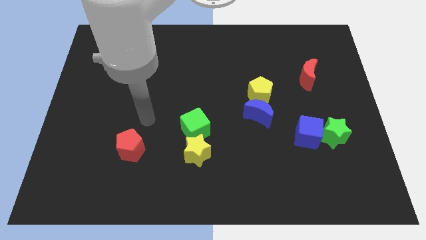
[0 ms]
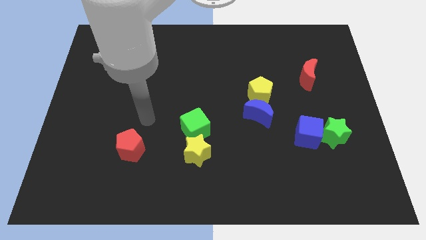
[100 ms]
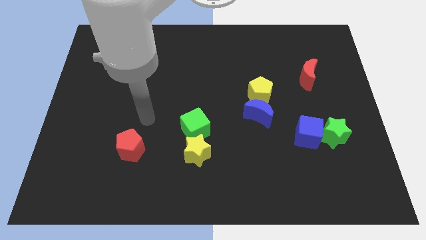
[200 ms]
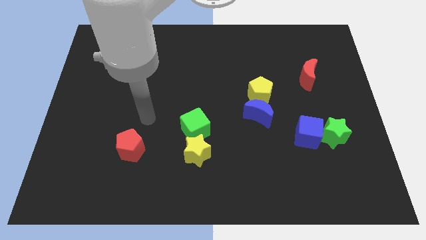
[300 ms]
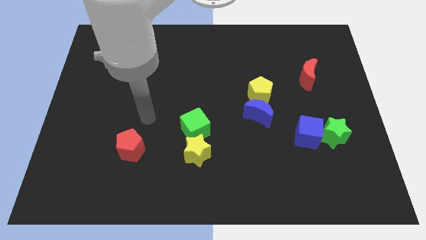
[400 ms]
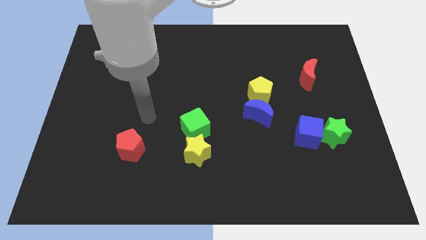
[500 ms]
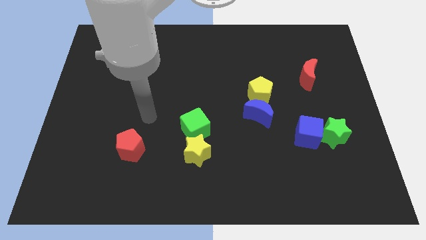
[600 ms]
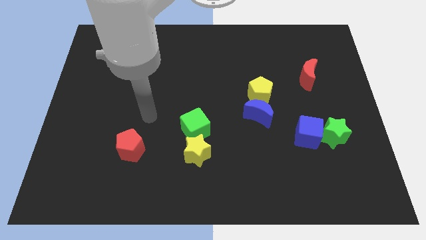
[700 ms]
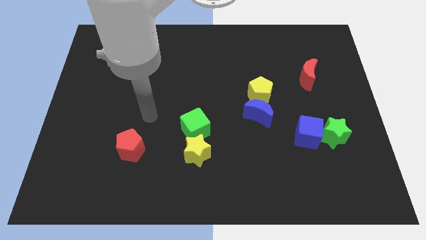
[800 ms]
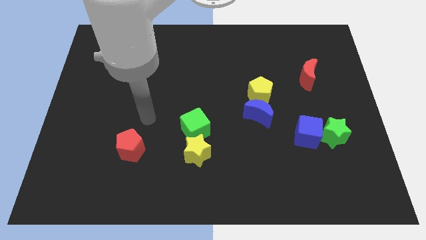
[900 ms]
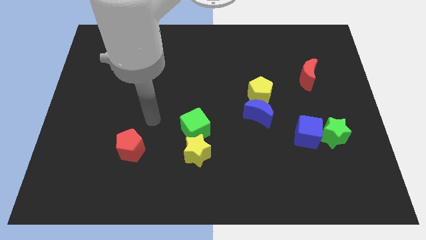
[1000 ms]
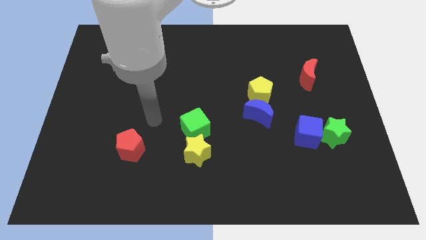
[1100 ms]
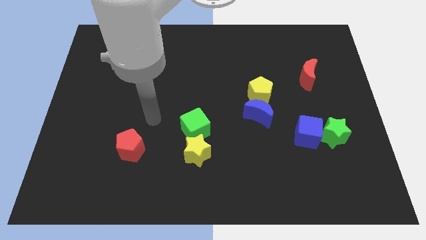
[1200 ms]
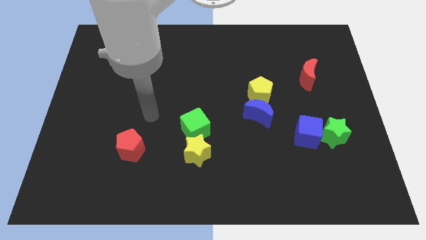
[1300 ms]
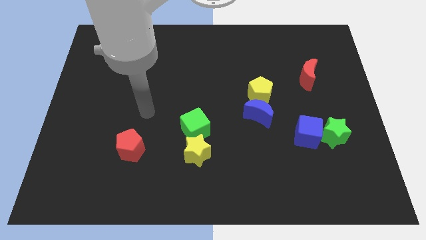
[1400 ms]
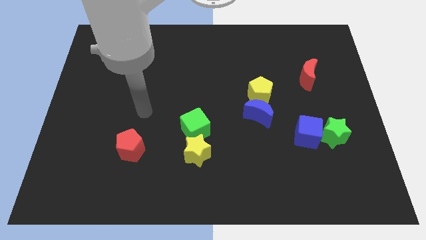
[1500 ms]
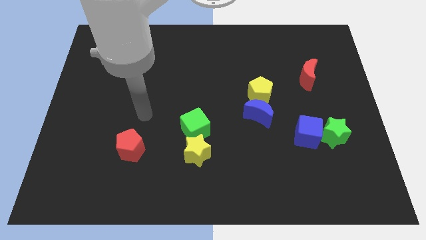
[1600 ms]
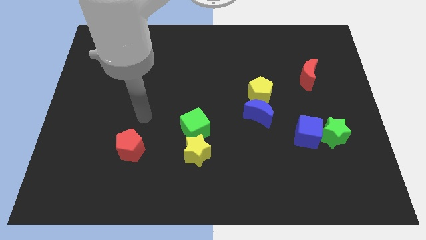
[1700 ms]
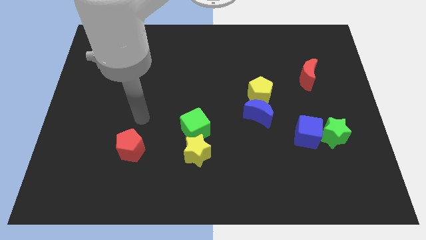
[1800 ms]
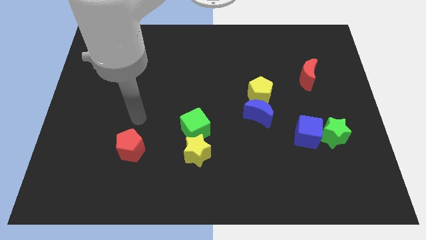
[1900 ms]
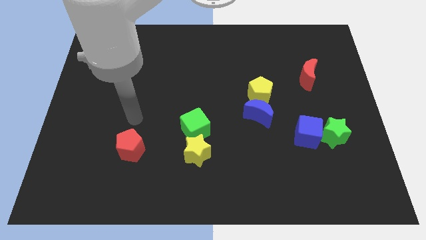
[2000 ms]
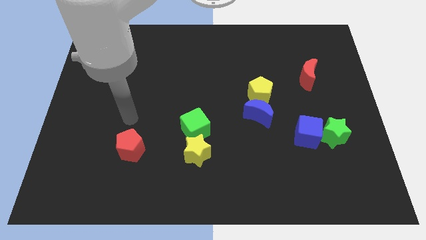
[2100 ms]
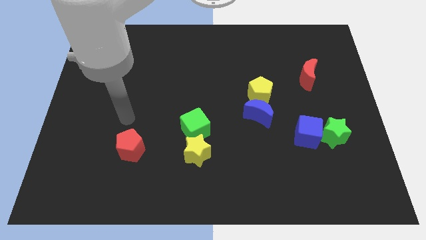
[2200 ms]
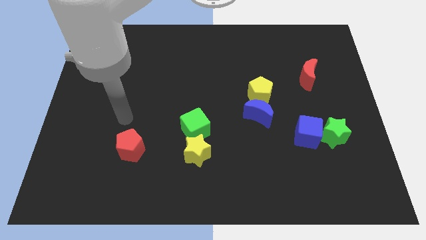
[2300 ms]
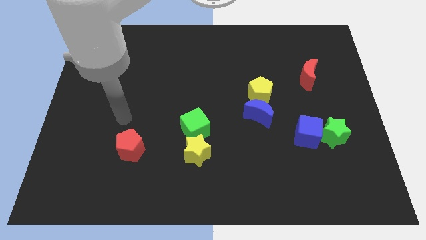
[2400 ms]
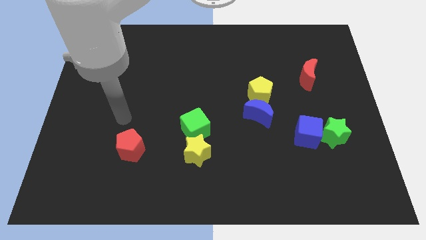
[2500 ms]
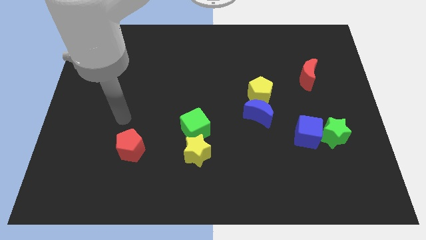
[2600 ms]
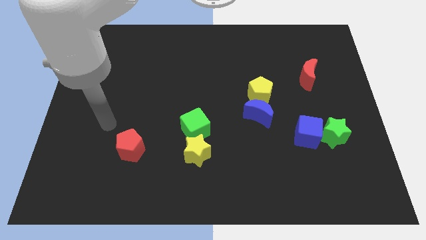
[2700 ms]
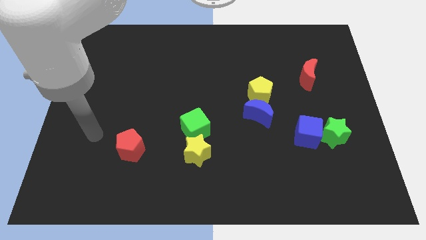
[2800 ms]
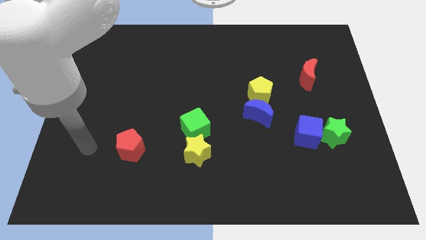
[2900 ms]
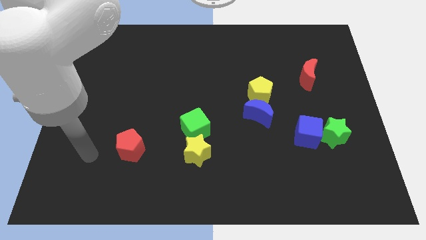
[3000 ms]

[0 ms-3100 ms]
place your hand at left side of the red pentagon

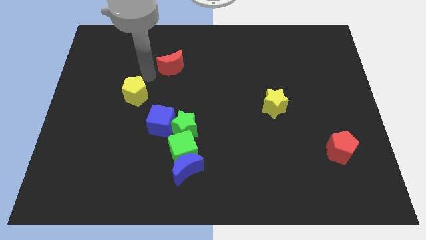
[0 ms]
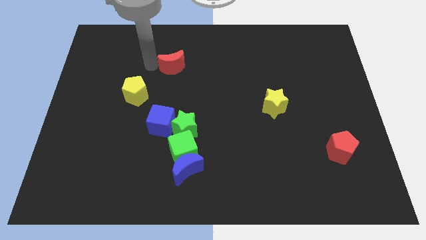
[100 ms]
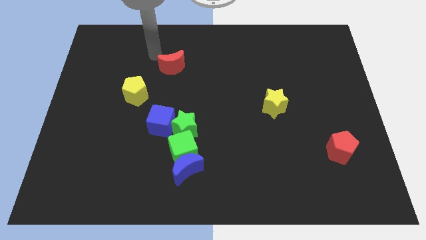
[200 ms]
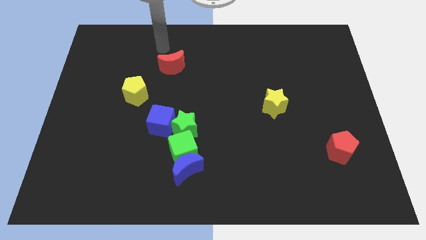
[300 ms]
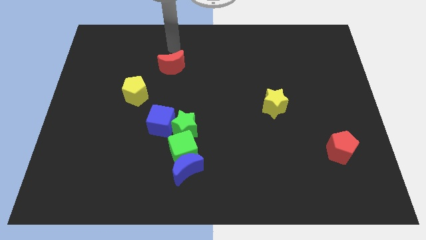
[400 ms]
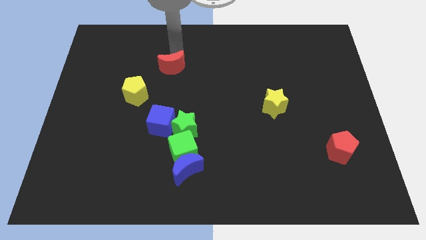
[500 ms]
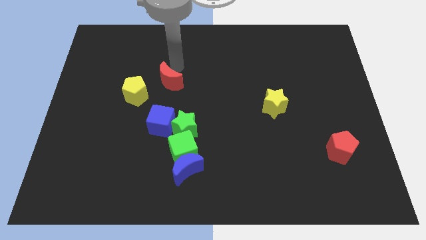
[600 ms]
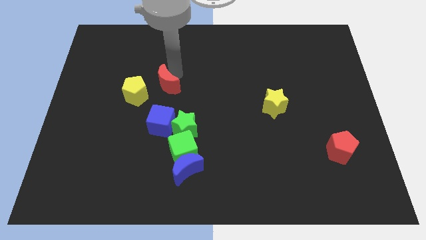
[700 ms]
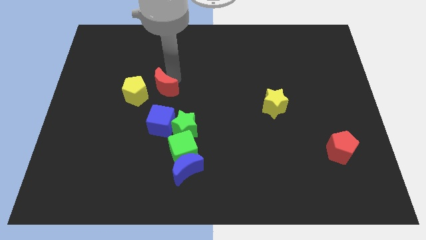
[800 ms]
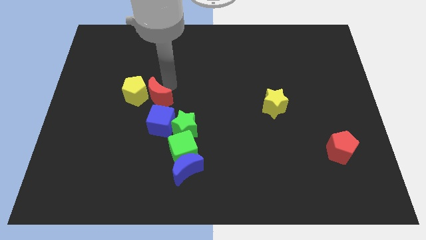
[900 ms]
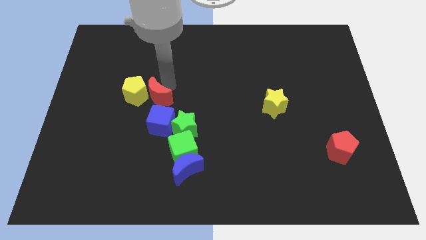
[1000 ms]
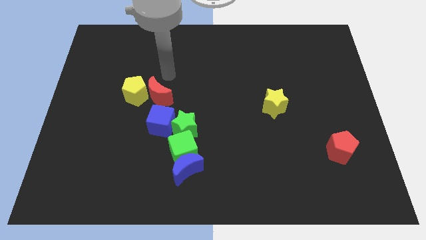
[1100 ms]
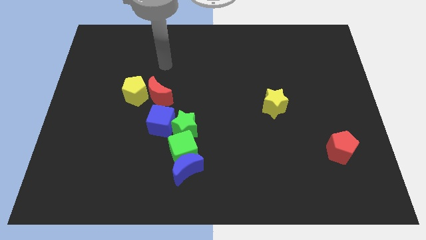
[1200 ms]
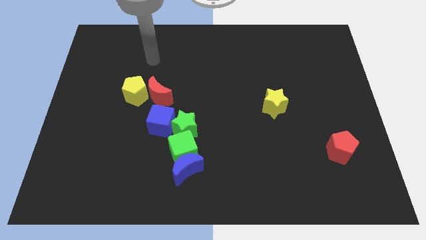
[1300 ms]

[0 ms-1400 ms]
push the red crescent to the right of the yellow pentagon

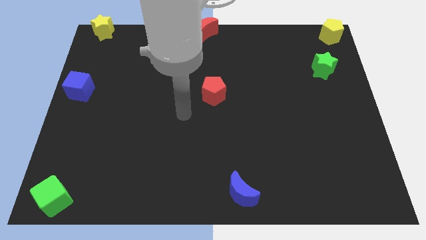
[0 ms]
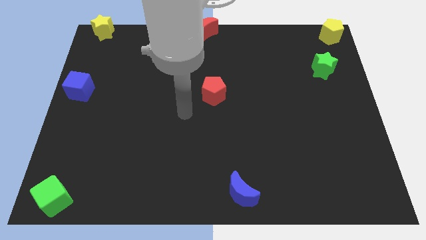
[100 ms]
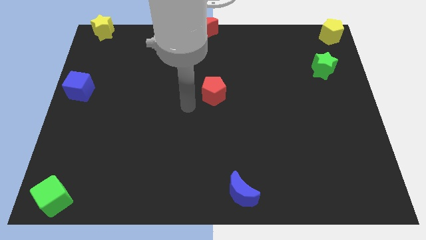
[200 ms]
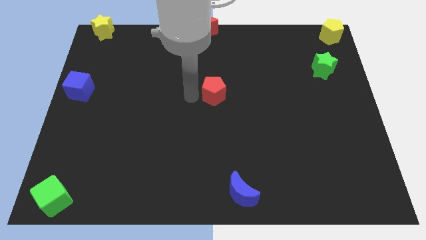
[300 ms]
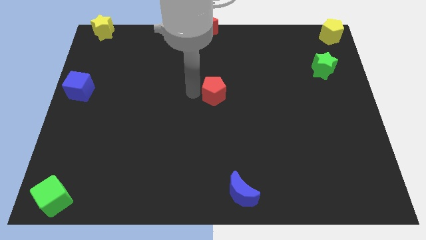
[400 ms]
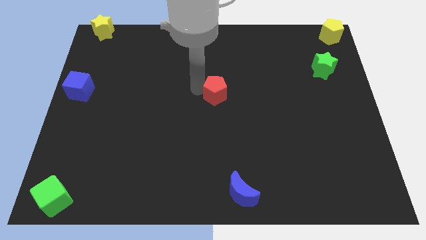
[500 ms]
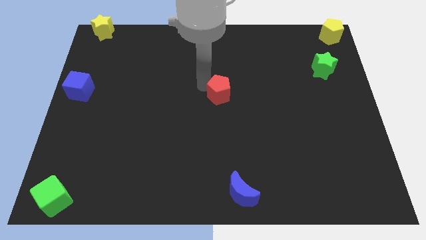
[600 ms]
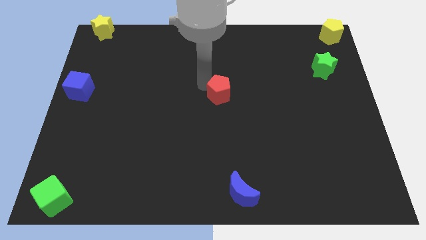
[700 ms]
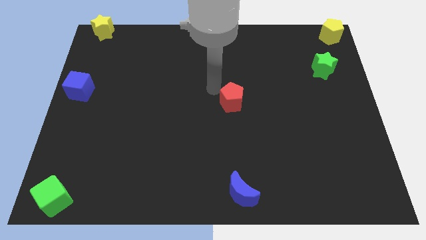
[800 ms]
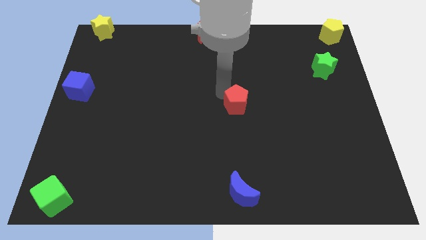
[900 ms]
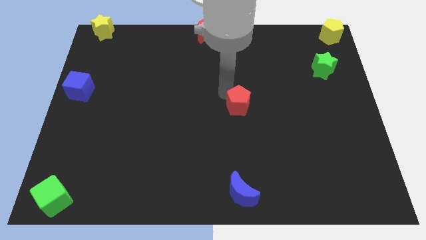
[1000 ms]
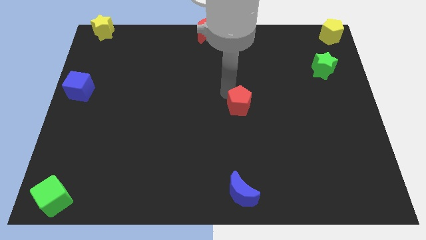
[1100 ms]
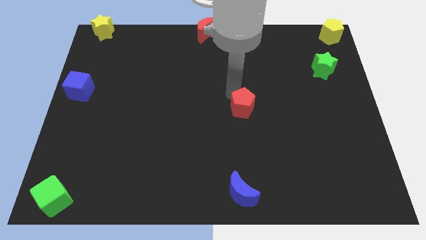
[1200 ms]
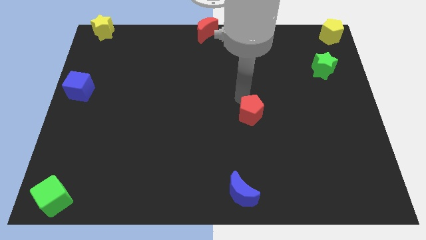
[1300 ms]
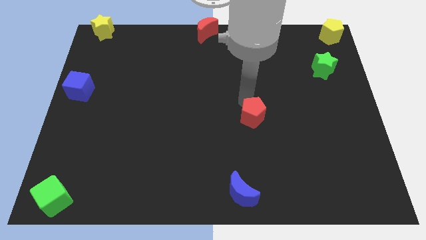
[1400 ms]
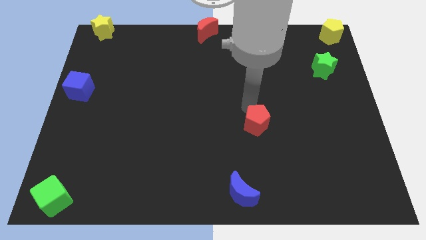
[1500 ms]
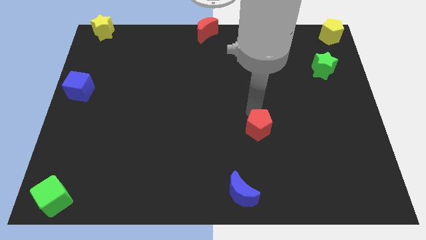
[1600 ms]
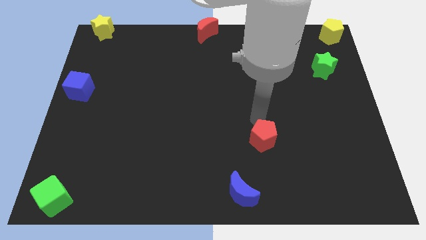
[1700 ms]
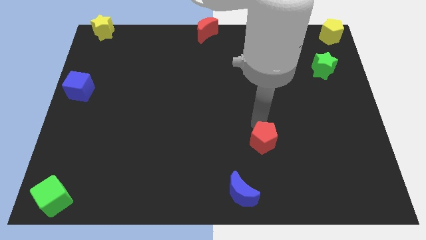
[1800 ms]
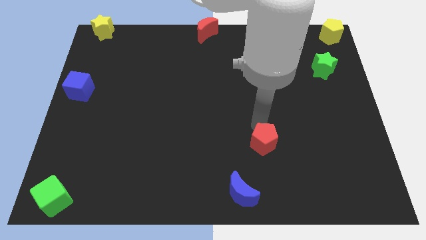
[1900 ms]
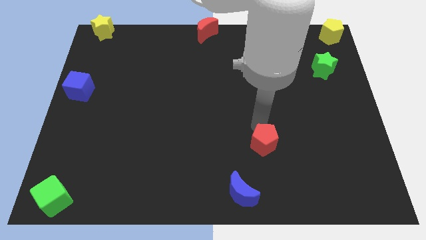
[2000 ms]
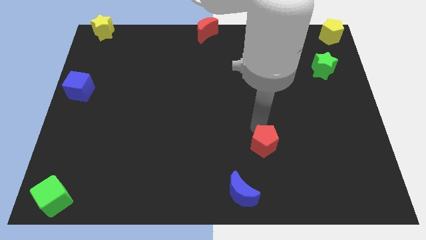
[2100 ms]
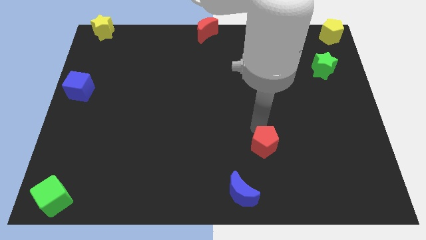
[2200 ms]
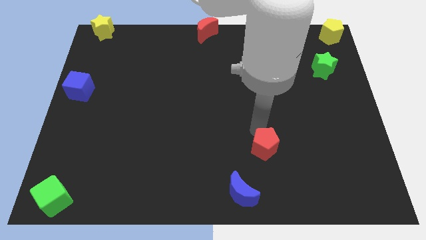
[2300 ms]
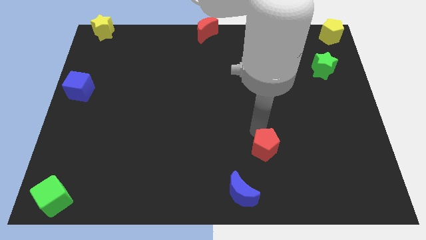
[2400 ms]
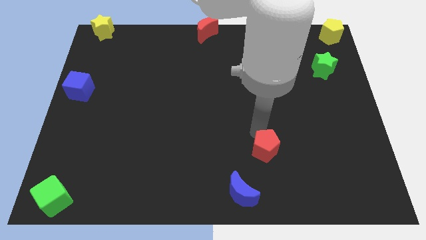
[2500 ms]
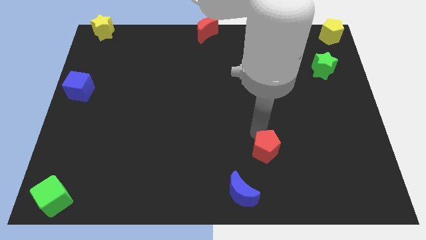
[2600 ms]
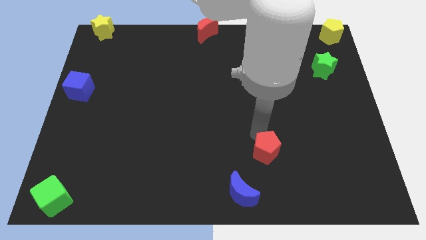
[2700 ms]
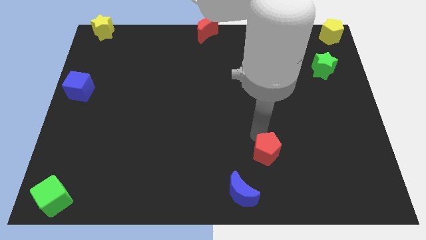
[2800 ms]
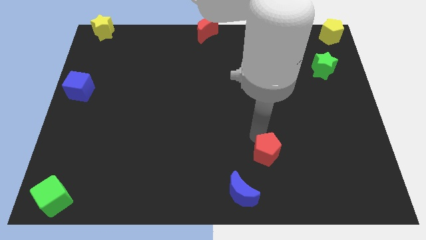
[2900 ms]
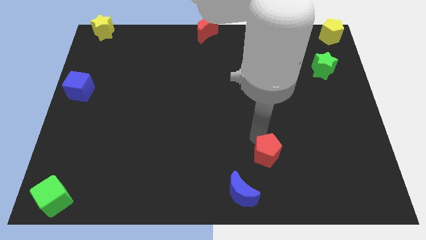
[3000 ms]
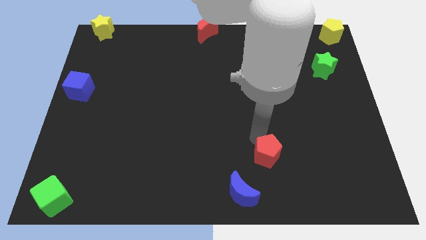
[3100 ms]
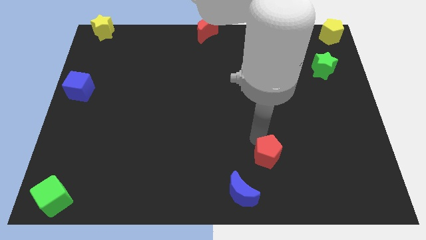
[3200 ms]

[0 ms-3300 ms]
push the red pentagon in between the blue moon and green star

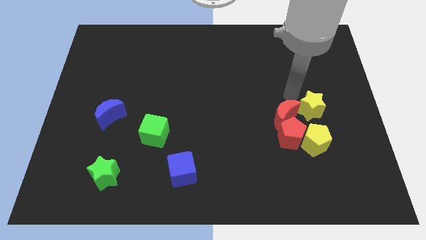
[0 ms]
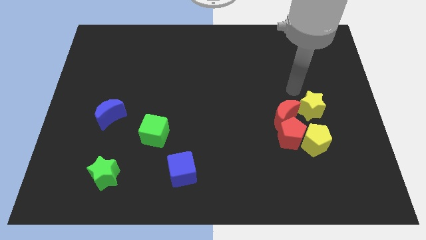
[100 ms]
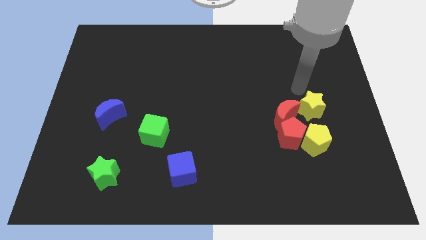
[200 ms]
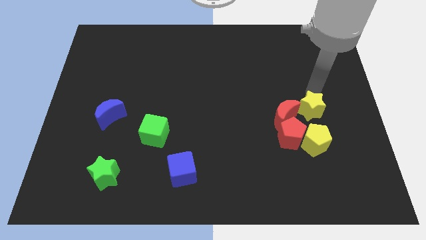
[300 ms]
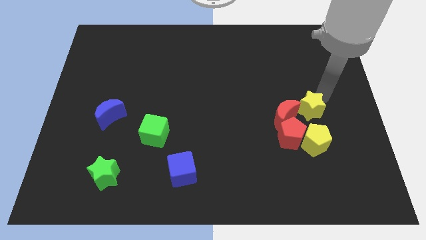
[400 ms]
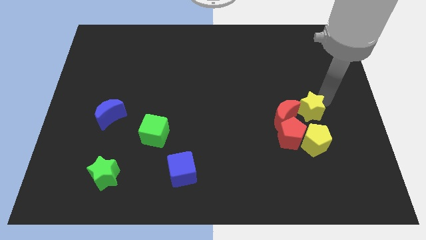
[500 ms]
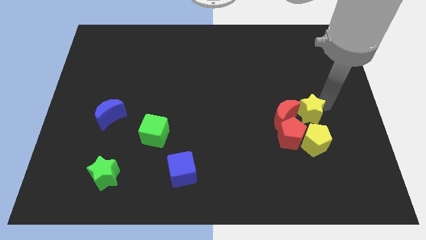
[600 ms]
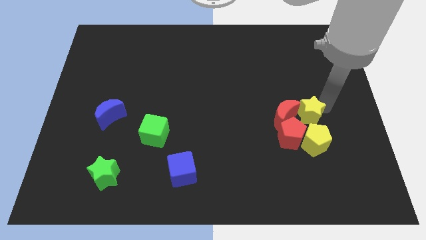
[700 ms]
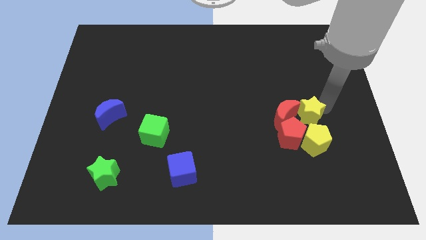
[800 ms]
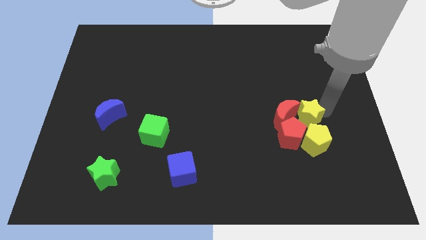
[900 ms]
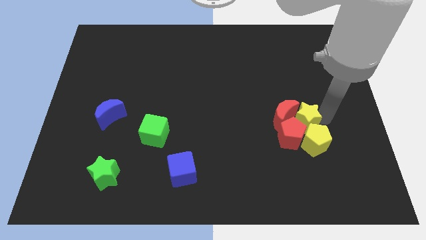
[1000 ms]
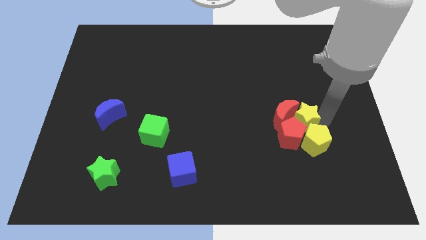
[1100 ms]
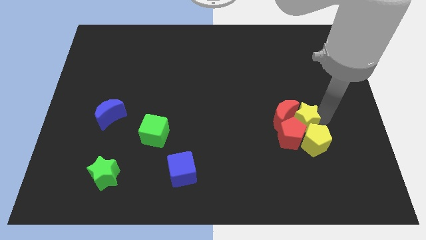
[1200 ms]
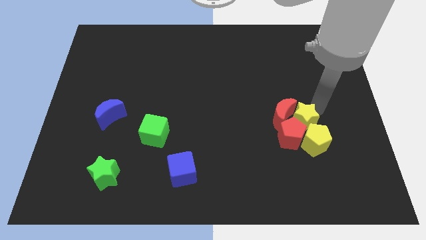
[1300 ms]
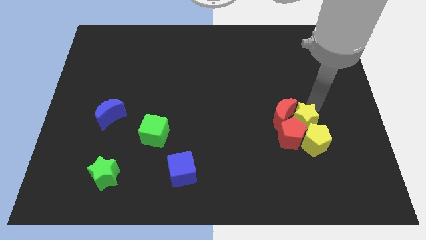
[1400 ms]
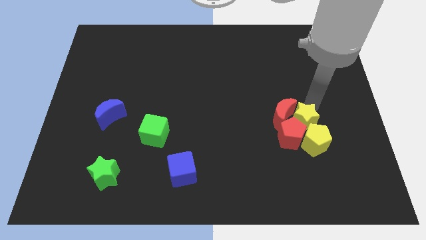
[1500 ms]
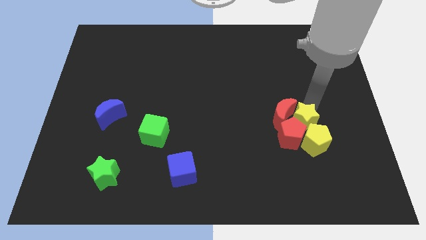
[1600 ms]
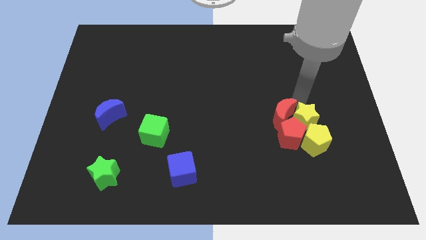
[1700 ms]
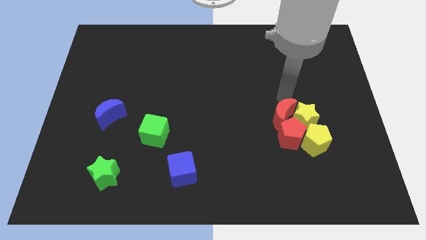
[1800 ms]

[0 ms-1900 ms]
push the yellow star into red blocks
